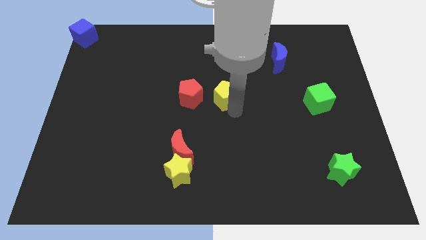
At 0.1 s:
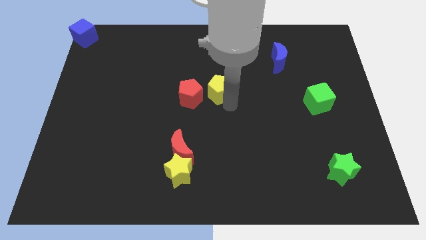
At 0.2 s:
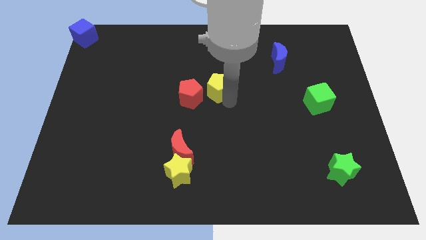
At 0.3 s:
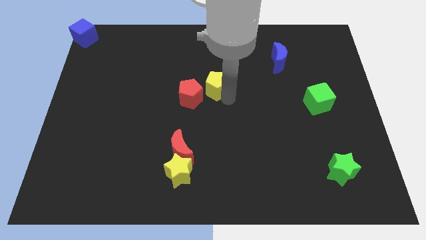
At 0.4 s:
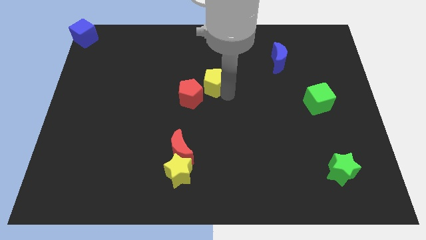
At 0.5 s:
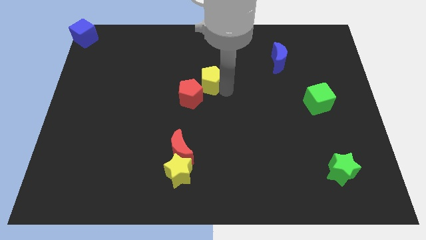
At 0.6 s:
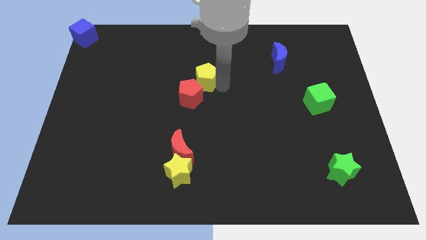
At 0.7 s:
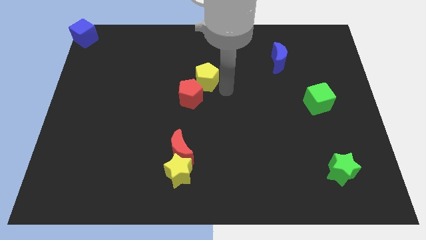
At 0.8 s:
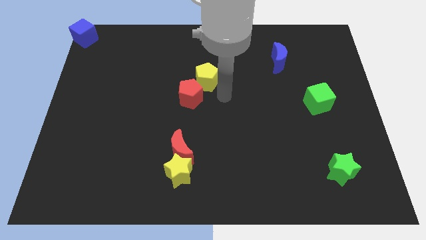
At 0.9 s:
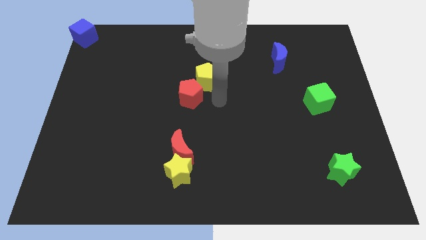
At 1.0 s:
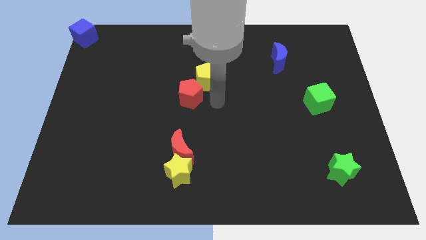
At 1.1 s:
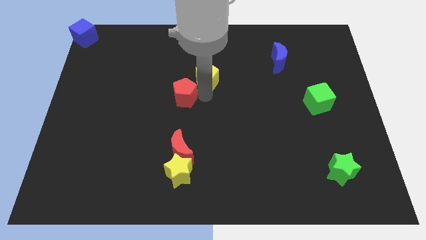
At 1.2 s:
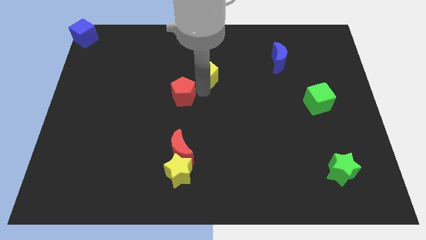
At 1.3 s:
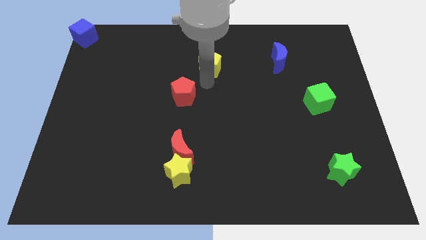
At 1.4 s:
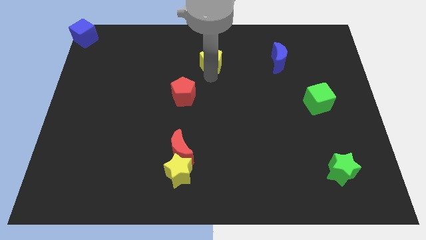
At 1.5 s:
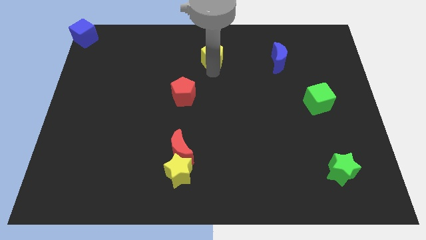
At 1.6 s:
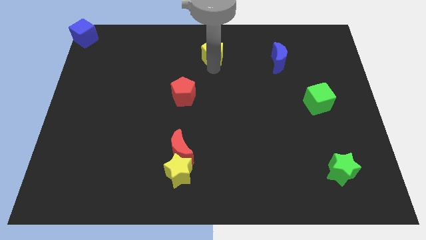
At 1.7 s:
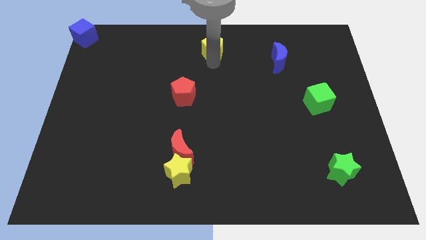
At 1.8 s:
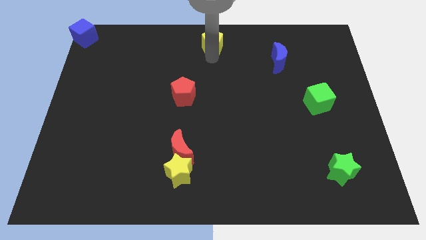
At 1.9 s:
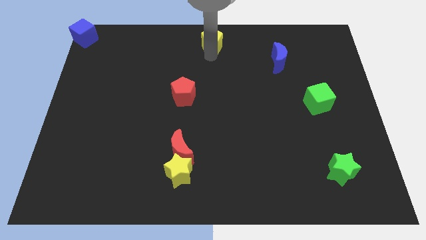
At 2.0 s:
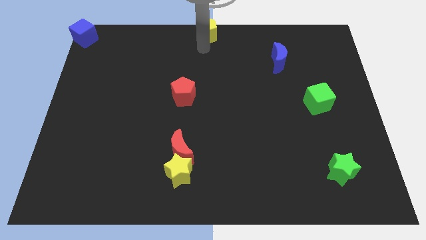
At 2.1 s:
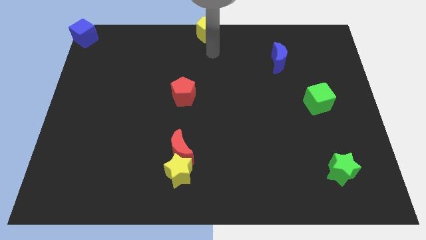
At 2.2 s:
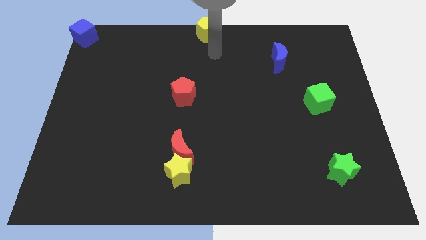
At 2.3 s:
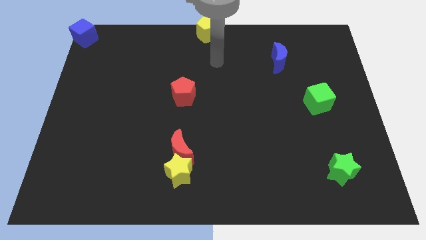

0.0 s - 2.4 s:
move the yellow pentagon to the top center

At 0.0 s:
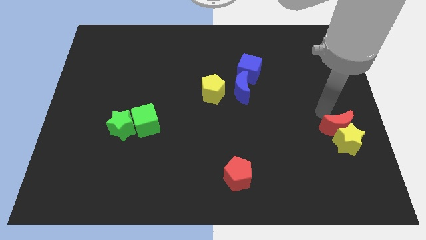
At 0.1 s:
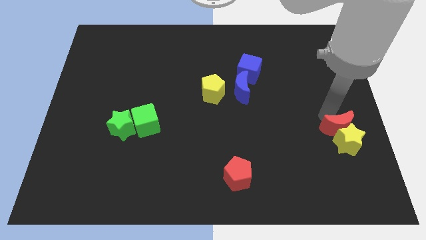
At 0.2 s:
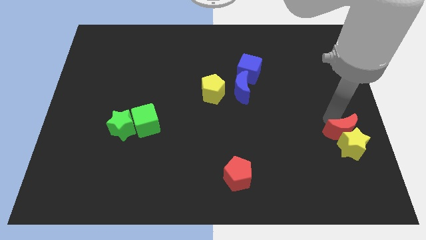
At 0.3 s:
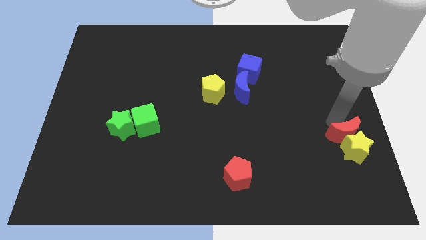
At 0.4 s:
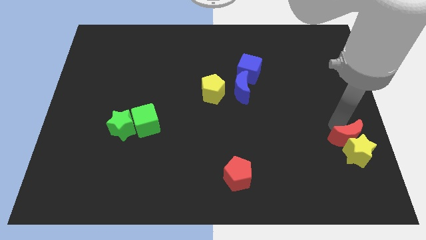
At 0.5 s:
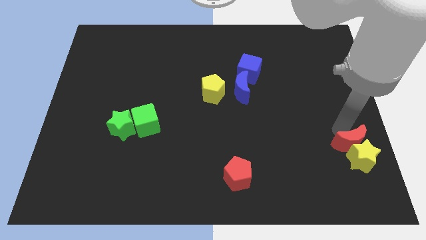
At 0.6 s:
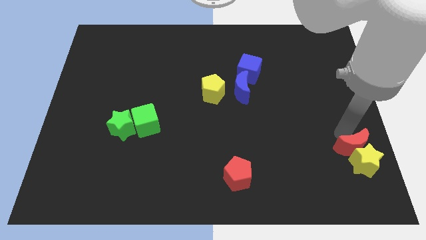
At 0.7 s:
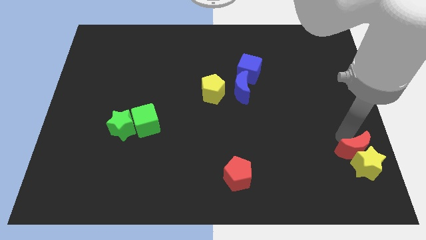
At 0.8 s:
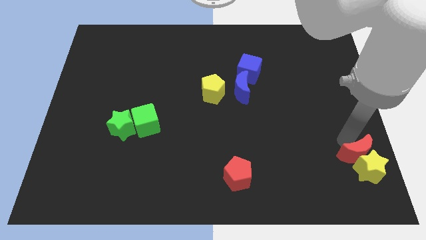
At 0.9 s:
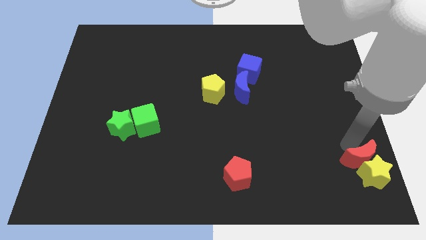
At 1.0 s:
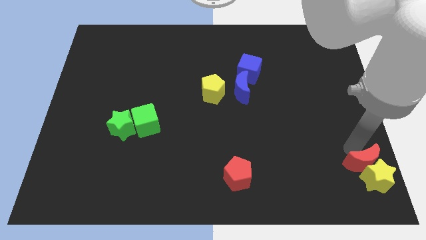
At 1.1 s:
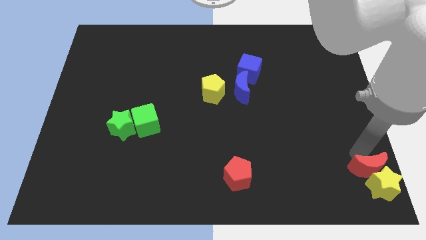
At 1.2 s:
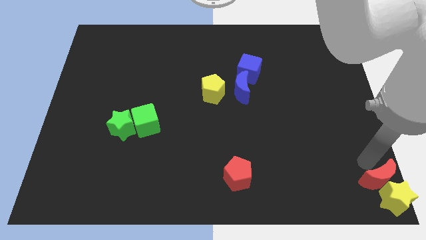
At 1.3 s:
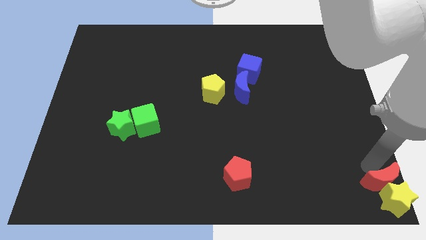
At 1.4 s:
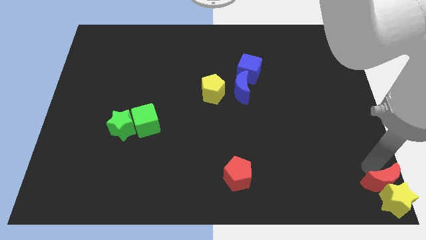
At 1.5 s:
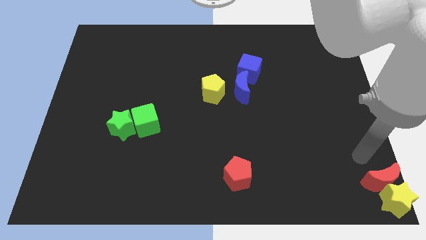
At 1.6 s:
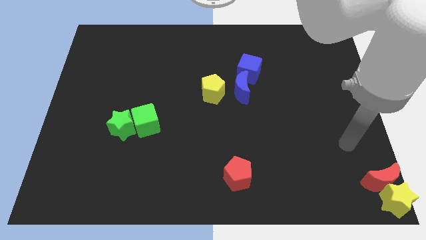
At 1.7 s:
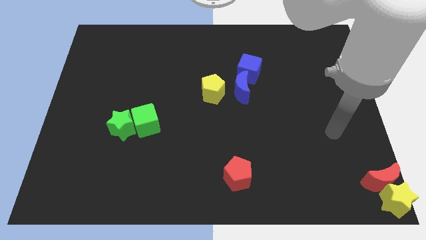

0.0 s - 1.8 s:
push the red crescent and yellow star to the bottom right corner of the board

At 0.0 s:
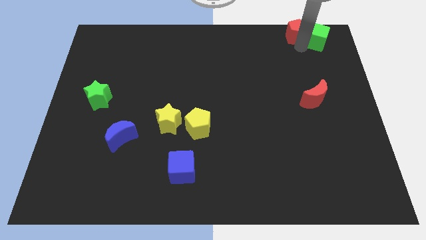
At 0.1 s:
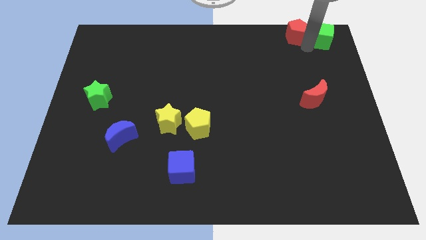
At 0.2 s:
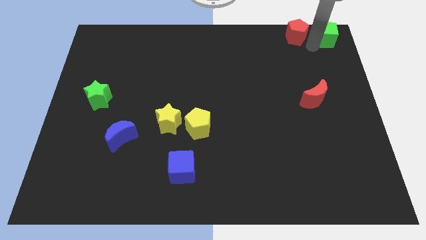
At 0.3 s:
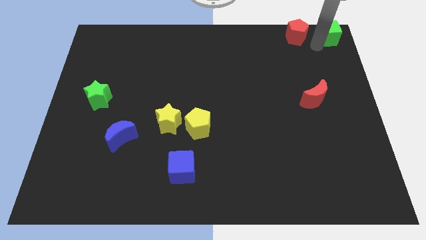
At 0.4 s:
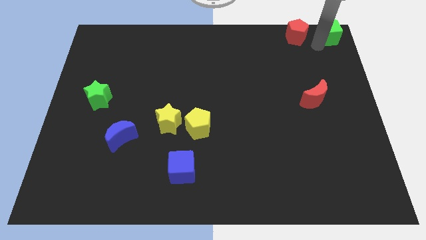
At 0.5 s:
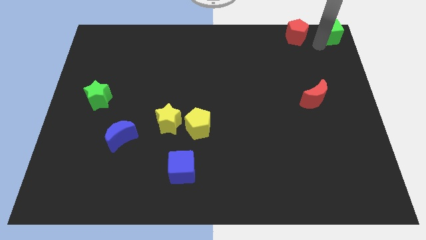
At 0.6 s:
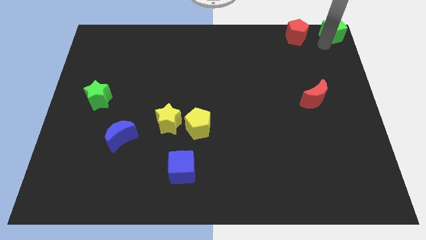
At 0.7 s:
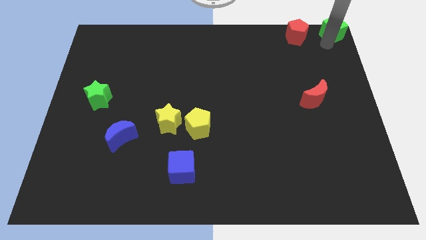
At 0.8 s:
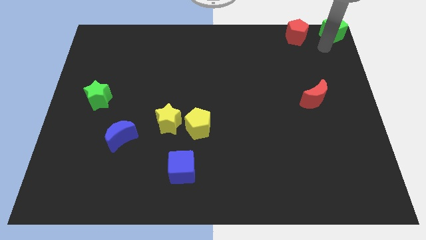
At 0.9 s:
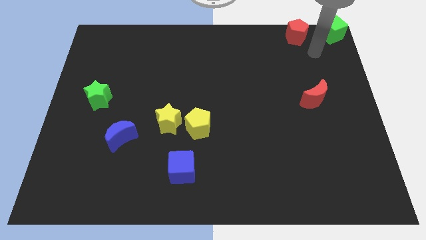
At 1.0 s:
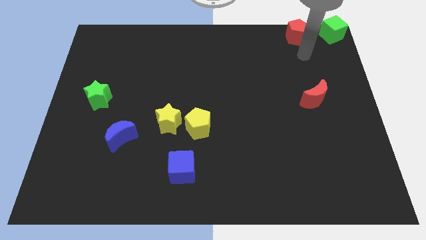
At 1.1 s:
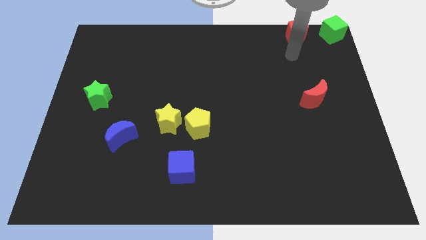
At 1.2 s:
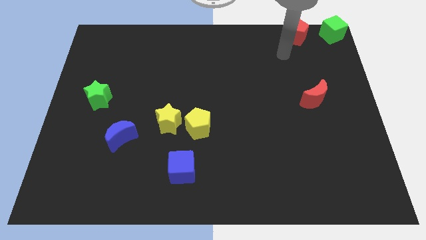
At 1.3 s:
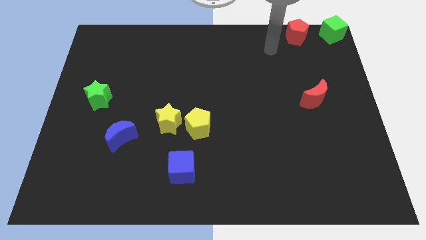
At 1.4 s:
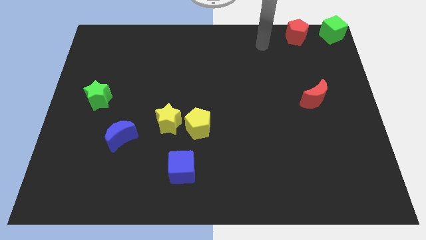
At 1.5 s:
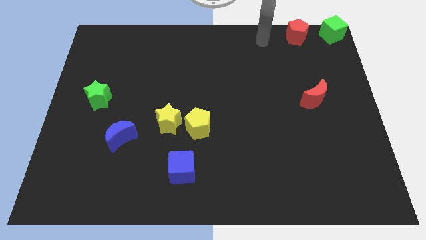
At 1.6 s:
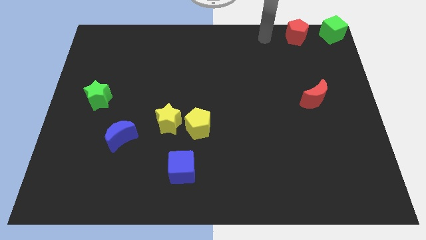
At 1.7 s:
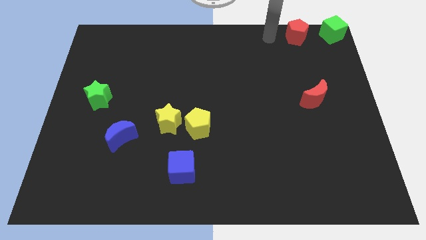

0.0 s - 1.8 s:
move the green cube to the right top

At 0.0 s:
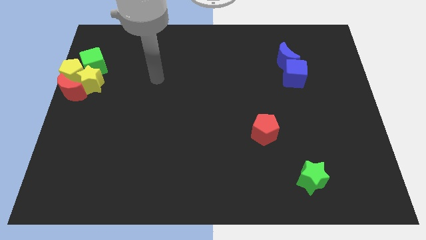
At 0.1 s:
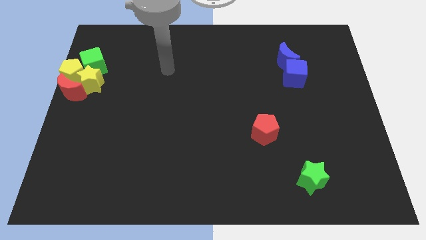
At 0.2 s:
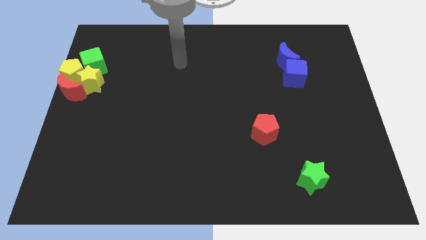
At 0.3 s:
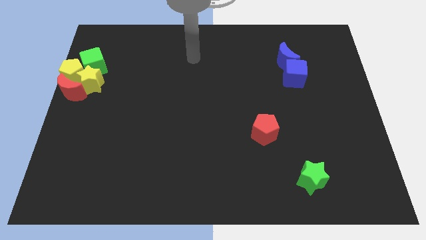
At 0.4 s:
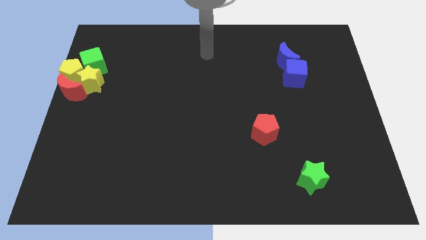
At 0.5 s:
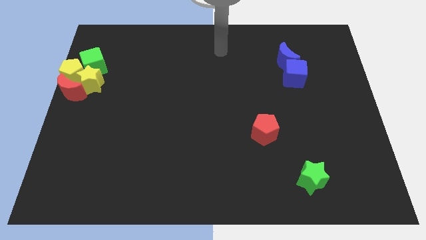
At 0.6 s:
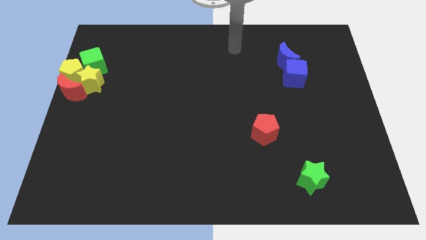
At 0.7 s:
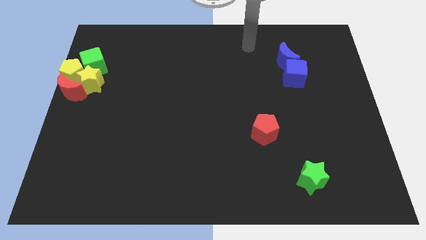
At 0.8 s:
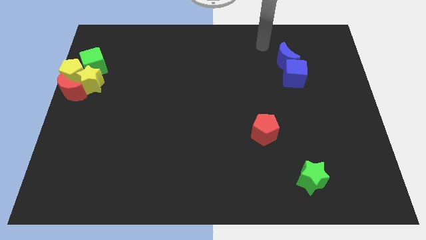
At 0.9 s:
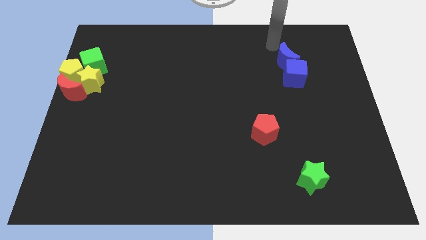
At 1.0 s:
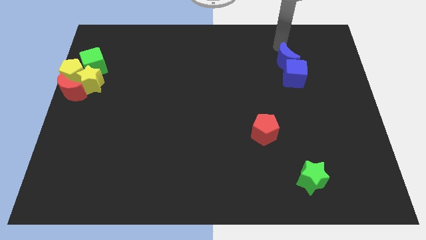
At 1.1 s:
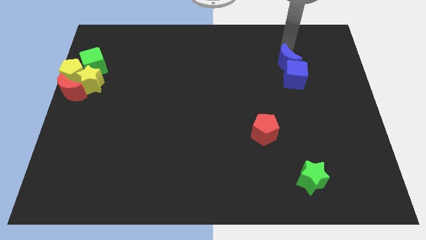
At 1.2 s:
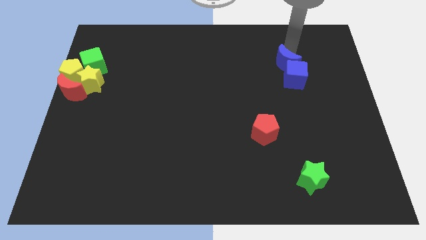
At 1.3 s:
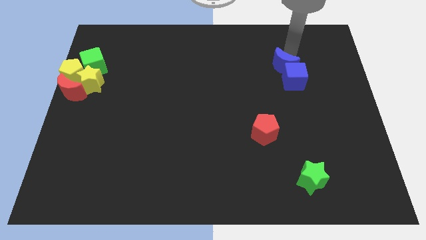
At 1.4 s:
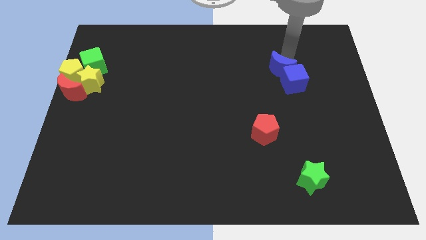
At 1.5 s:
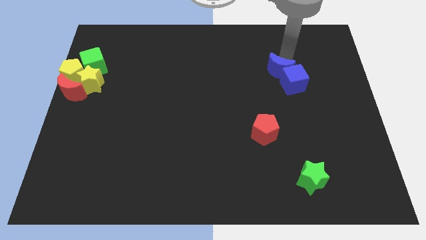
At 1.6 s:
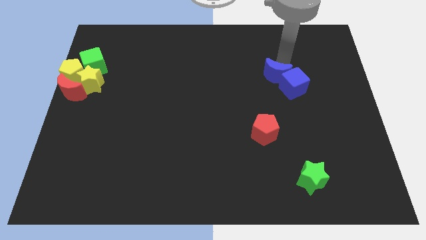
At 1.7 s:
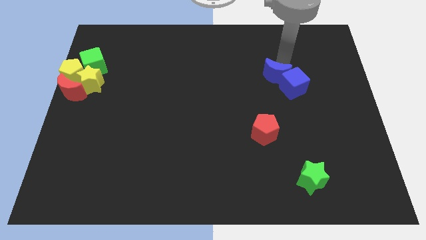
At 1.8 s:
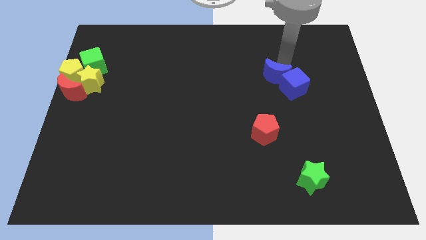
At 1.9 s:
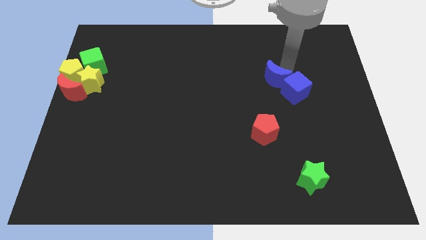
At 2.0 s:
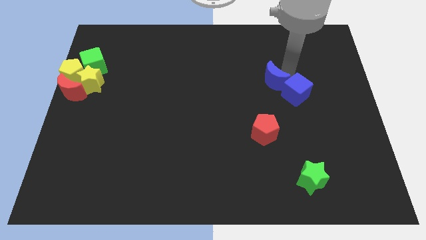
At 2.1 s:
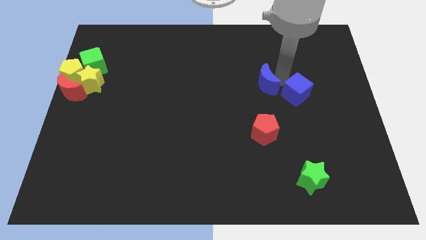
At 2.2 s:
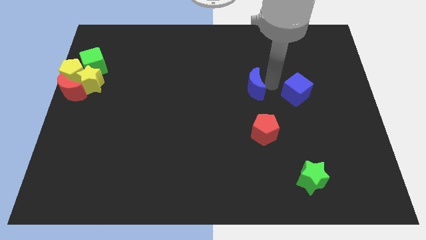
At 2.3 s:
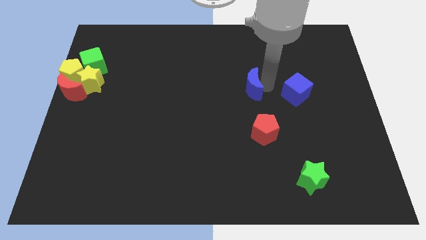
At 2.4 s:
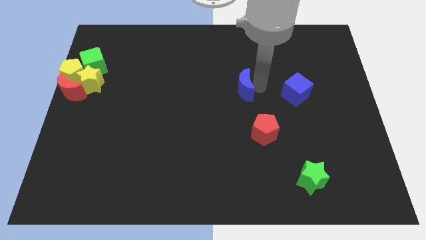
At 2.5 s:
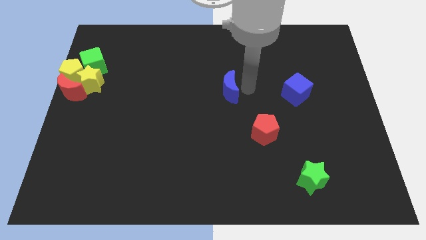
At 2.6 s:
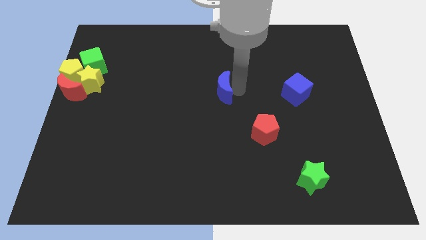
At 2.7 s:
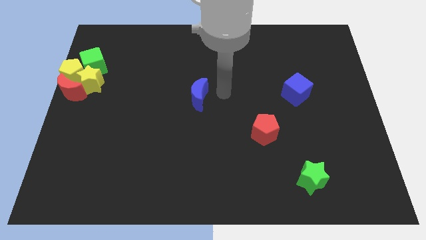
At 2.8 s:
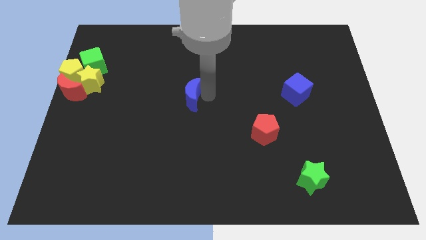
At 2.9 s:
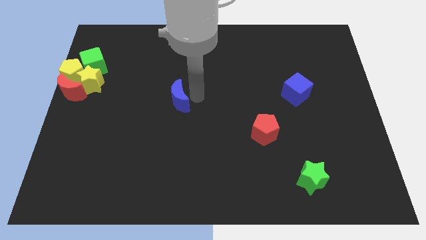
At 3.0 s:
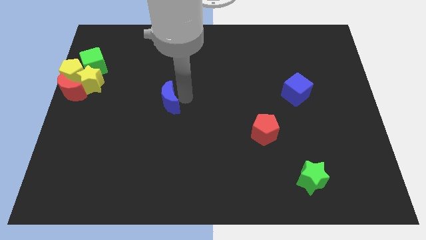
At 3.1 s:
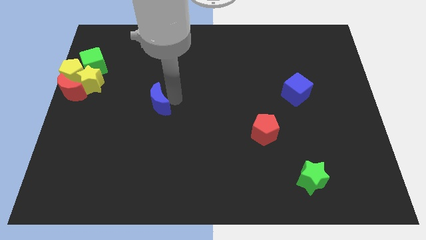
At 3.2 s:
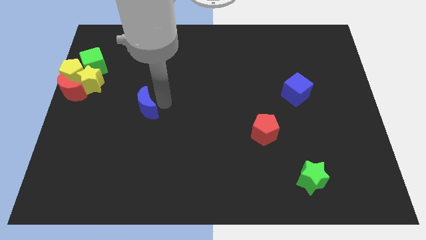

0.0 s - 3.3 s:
move the blue moon towards the center left of board
